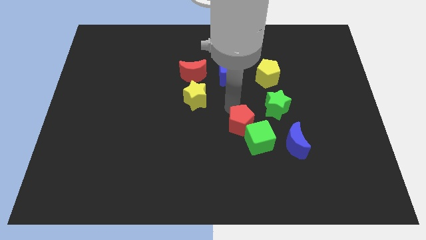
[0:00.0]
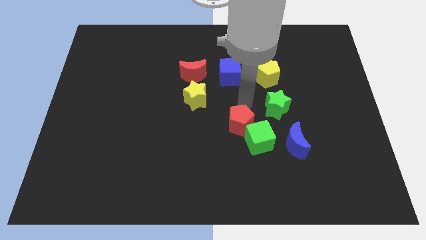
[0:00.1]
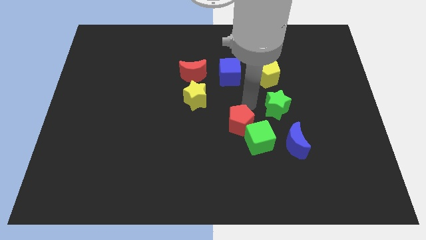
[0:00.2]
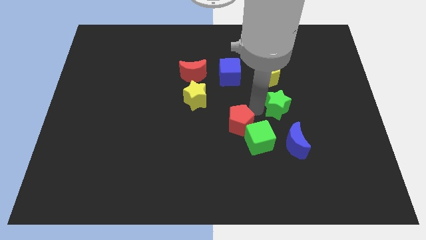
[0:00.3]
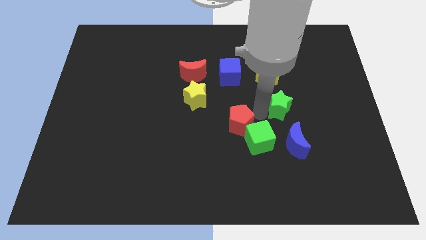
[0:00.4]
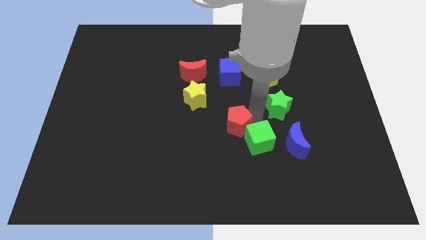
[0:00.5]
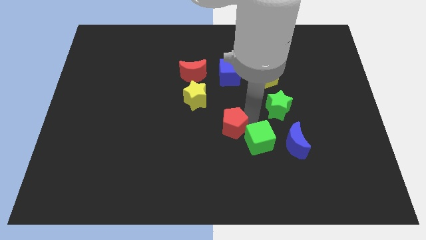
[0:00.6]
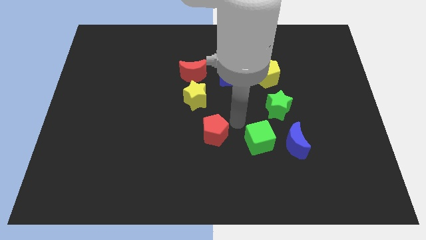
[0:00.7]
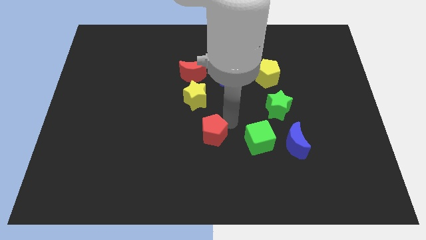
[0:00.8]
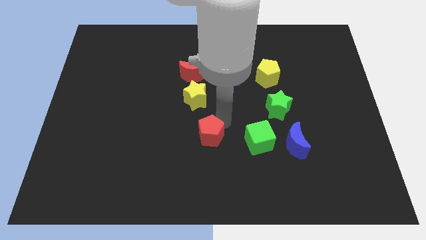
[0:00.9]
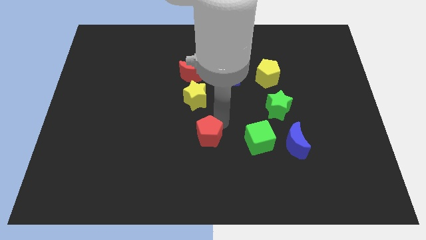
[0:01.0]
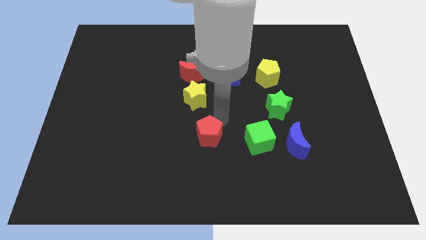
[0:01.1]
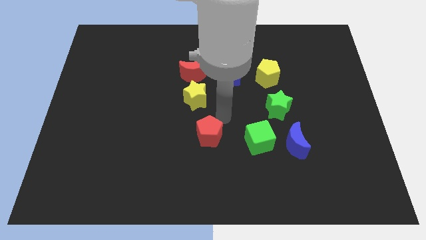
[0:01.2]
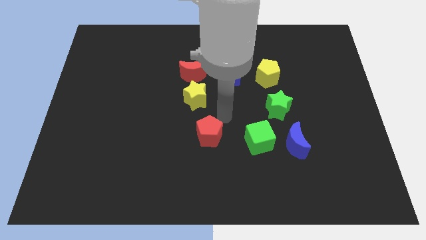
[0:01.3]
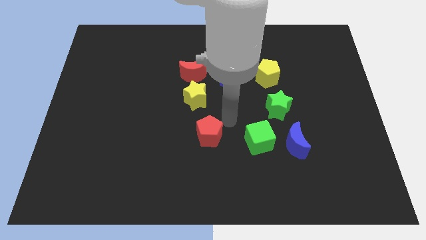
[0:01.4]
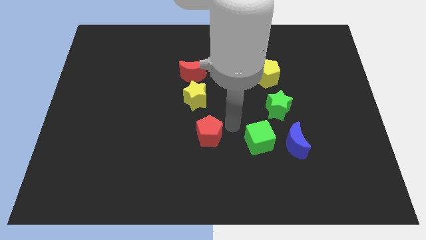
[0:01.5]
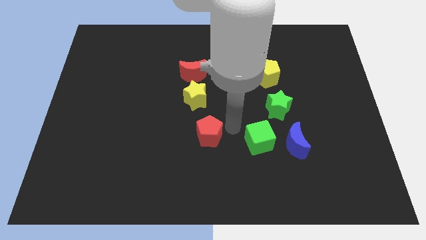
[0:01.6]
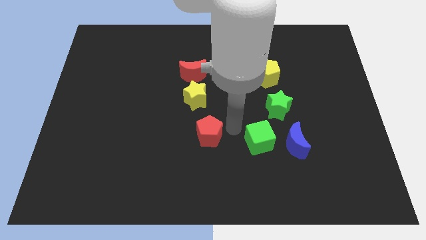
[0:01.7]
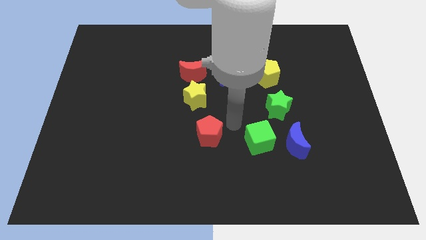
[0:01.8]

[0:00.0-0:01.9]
move the red pentagon below the yellow star

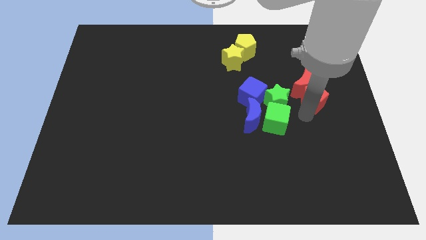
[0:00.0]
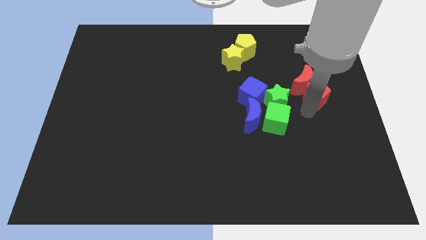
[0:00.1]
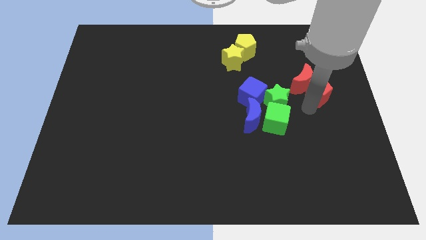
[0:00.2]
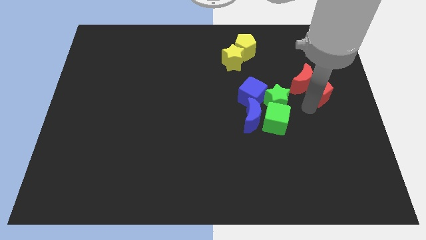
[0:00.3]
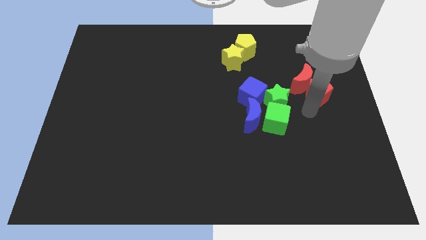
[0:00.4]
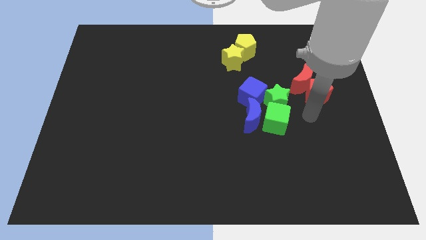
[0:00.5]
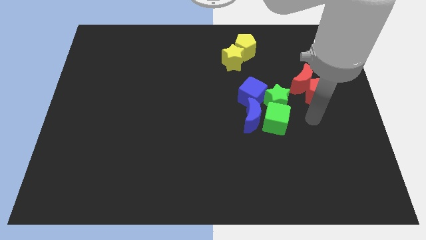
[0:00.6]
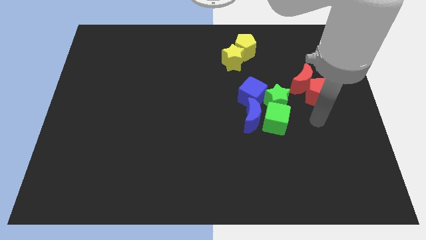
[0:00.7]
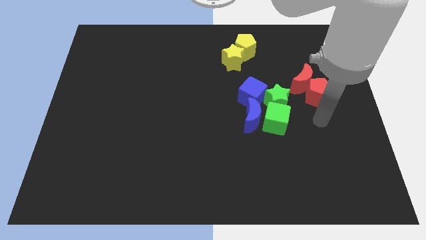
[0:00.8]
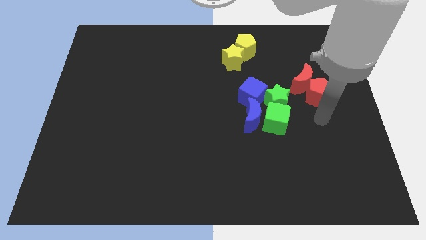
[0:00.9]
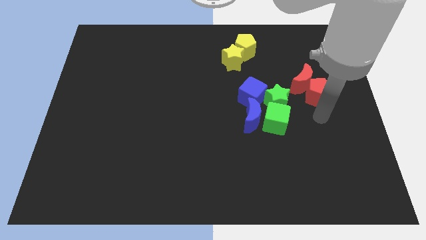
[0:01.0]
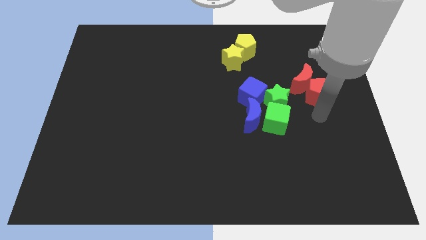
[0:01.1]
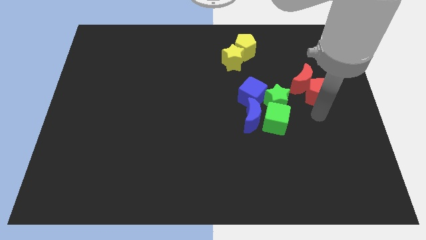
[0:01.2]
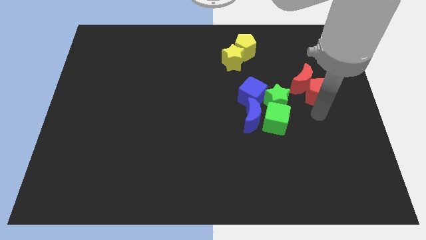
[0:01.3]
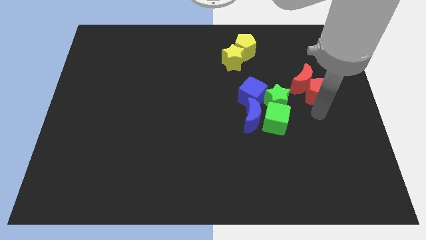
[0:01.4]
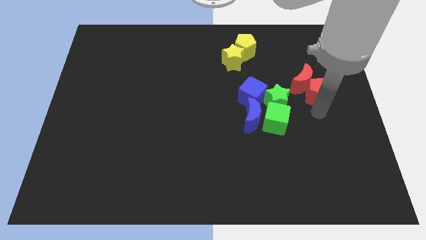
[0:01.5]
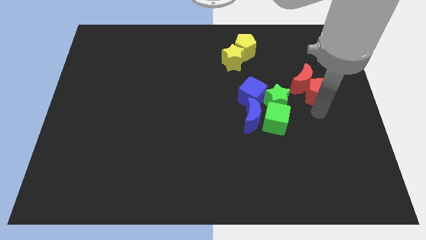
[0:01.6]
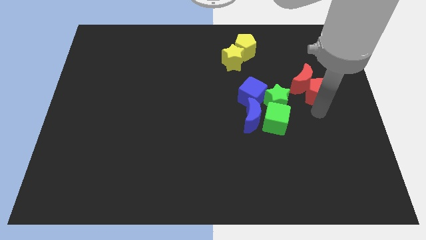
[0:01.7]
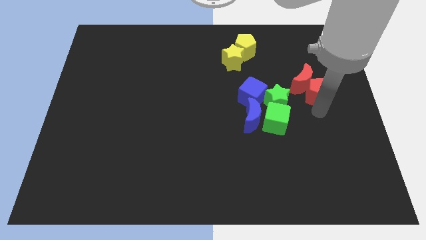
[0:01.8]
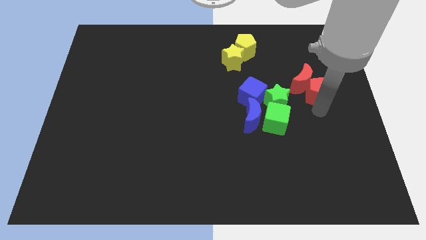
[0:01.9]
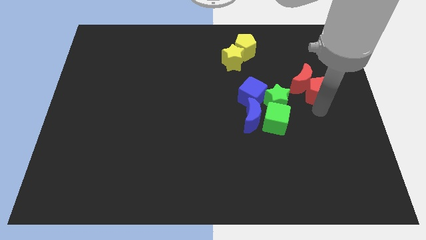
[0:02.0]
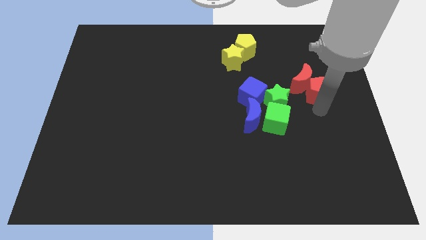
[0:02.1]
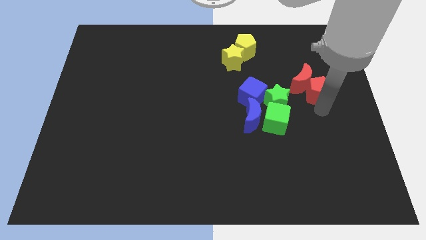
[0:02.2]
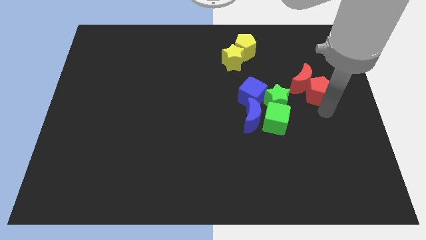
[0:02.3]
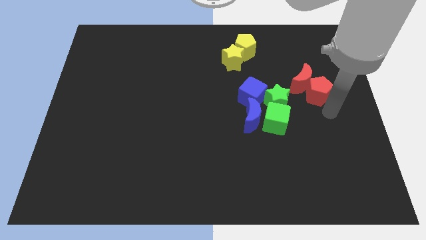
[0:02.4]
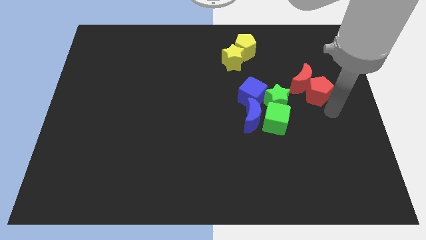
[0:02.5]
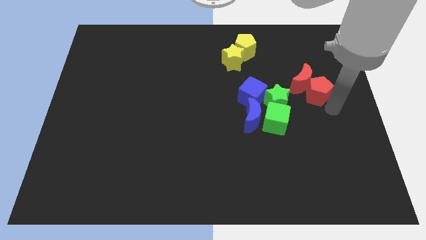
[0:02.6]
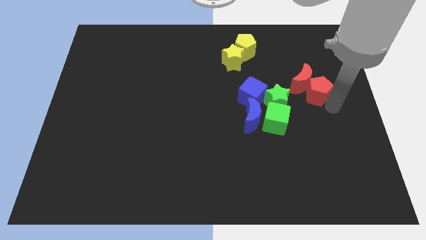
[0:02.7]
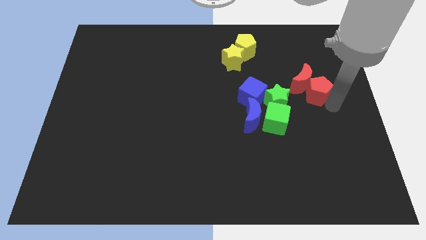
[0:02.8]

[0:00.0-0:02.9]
slightly move the red pentagon

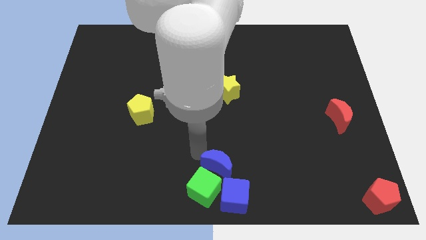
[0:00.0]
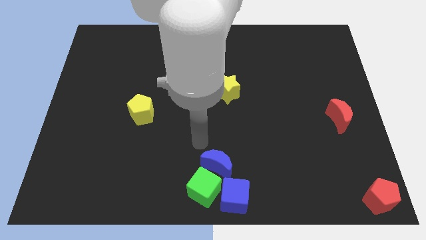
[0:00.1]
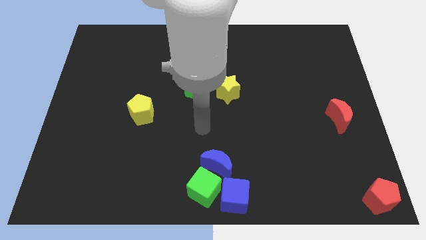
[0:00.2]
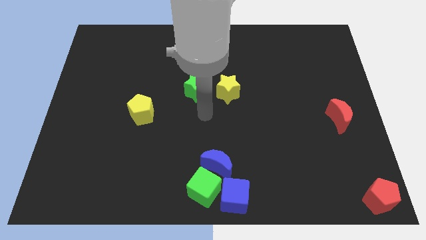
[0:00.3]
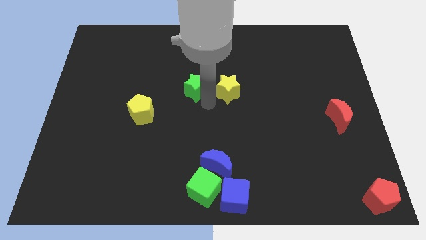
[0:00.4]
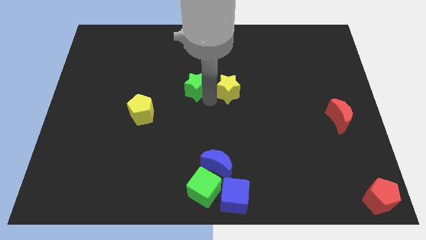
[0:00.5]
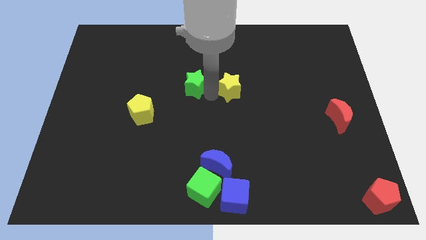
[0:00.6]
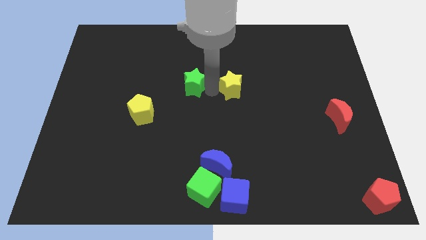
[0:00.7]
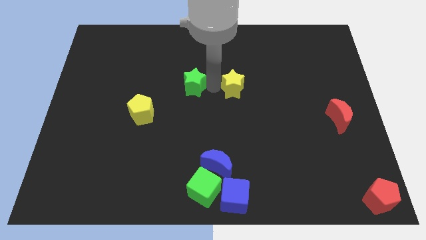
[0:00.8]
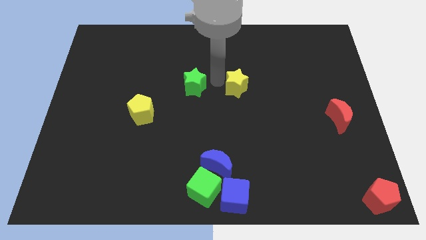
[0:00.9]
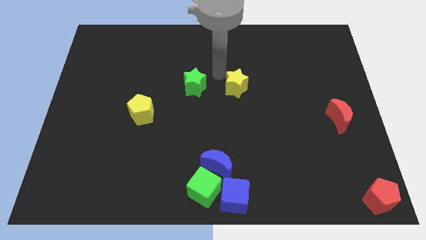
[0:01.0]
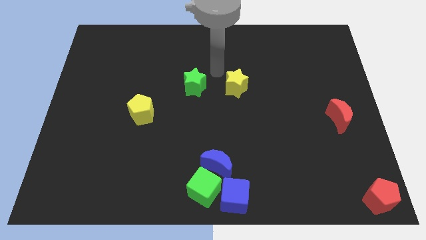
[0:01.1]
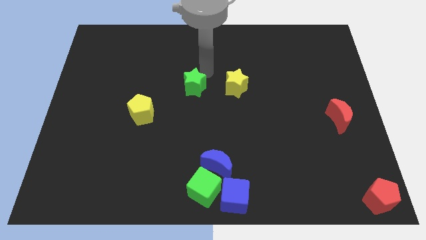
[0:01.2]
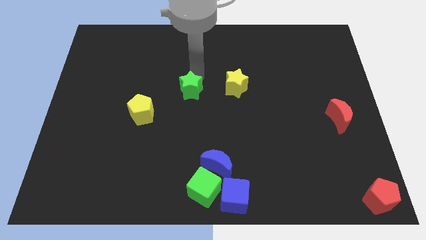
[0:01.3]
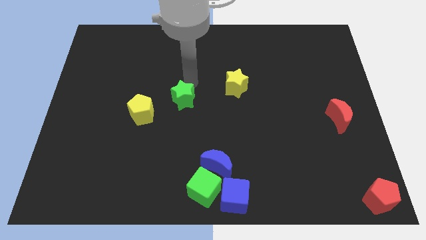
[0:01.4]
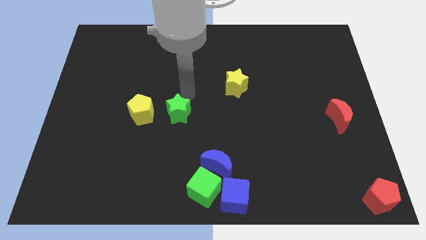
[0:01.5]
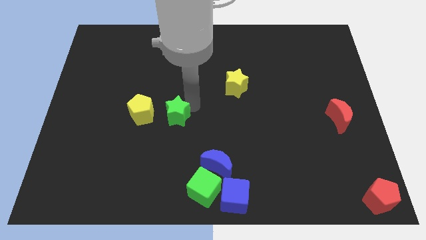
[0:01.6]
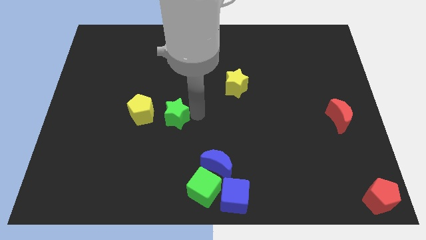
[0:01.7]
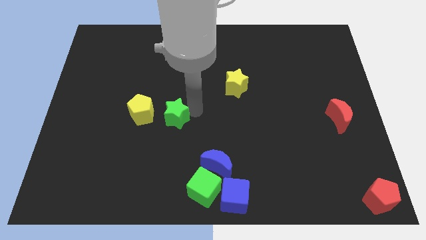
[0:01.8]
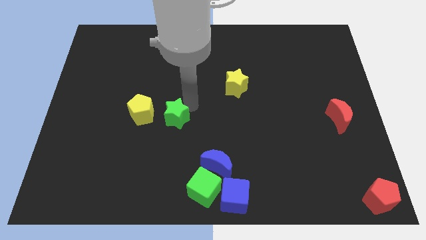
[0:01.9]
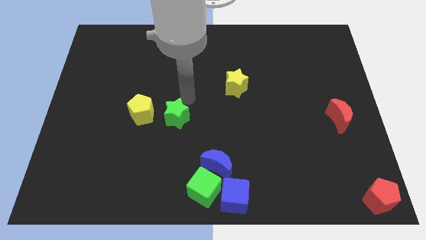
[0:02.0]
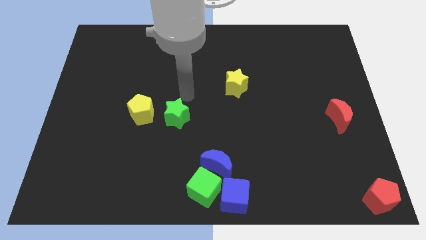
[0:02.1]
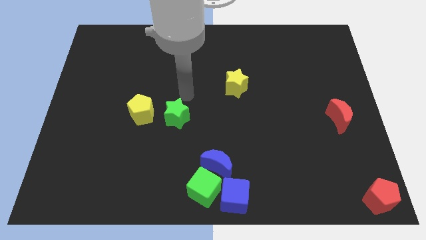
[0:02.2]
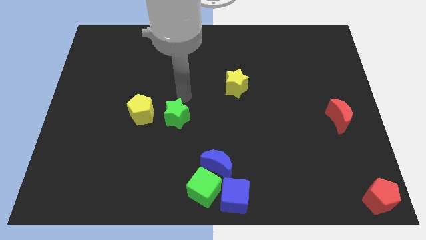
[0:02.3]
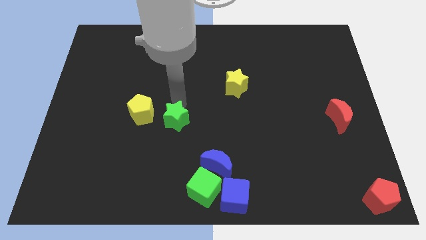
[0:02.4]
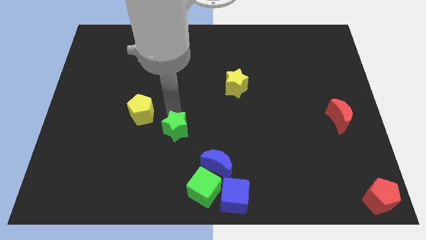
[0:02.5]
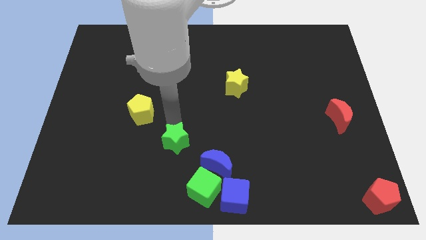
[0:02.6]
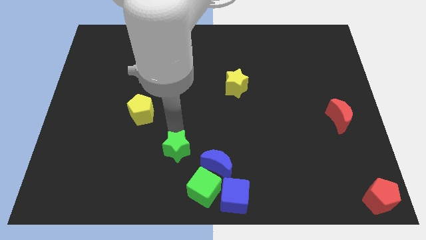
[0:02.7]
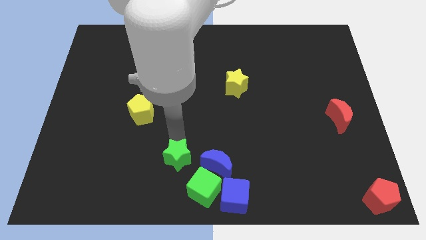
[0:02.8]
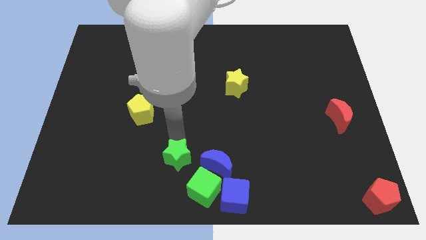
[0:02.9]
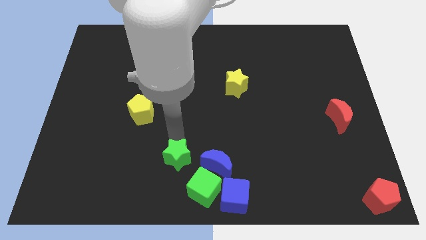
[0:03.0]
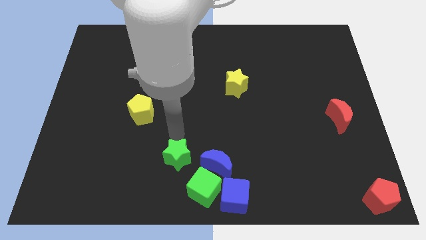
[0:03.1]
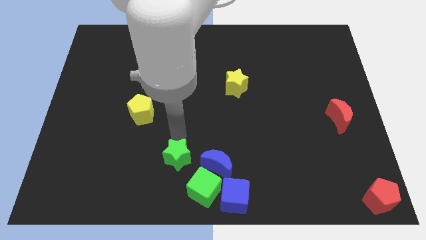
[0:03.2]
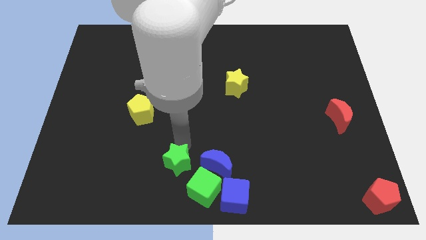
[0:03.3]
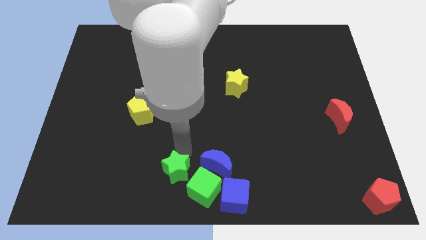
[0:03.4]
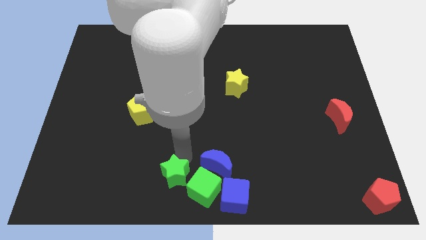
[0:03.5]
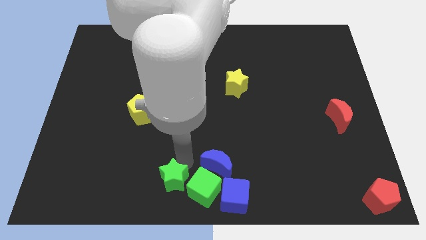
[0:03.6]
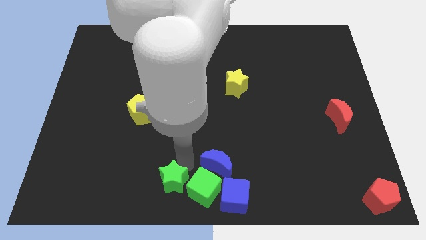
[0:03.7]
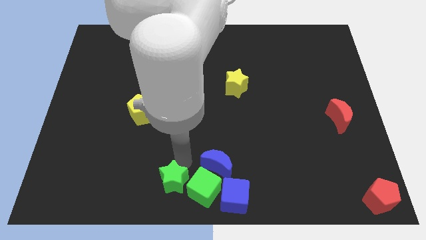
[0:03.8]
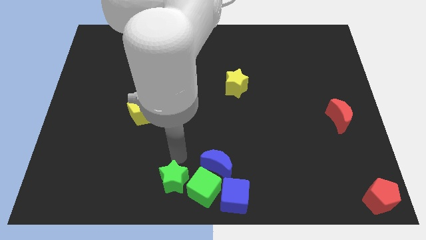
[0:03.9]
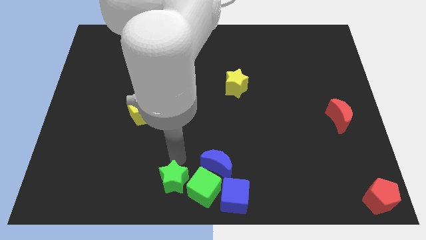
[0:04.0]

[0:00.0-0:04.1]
move the green star close to the left side of the green cube

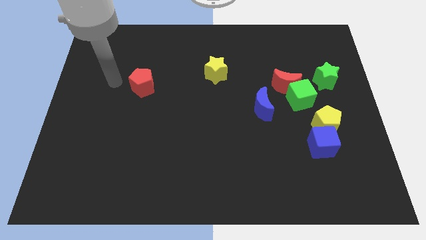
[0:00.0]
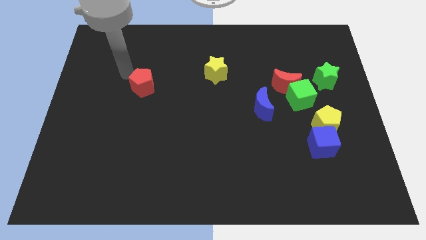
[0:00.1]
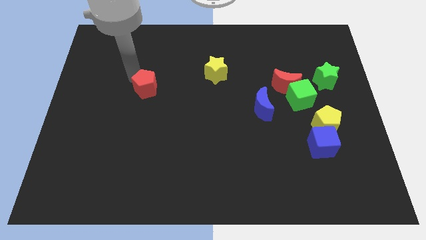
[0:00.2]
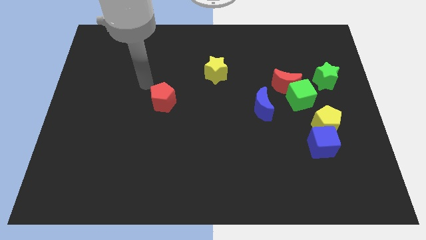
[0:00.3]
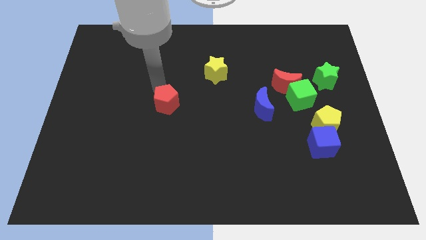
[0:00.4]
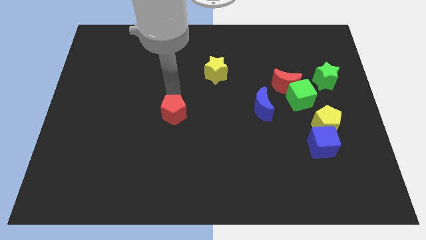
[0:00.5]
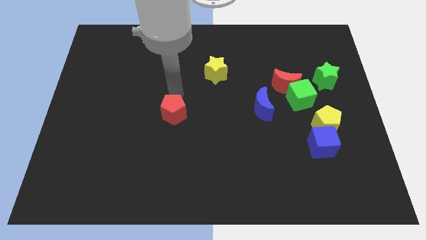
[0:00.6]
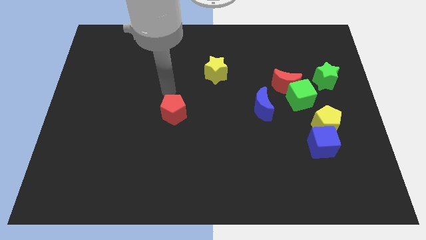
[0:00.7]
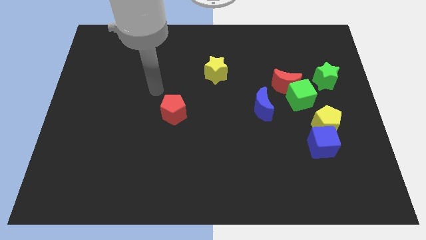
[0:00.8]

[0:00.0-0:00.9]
push the red pentagon towards the center of board
